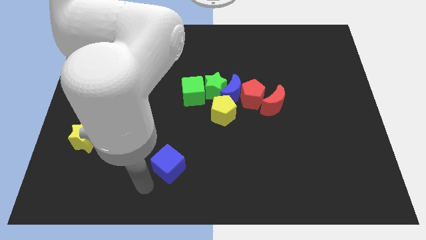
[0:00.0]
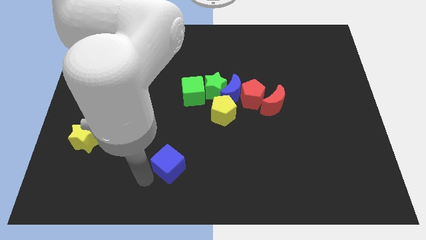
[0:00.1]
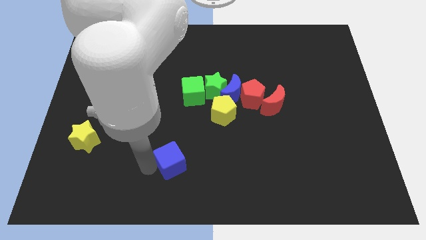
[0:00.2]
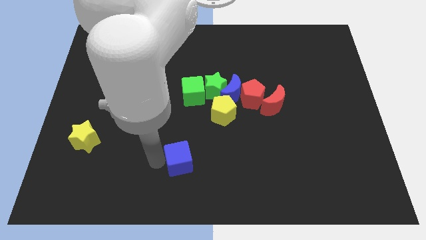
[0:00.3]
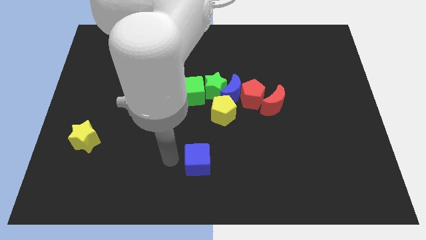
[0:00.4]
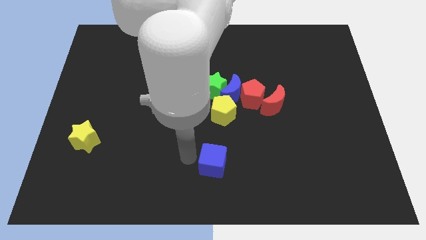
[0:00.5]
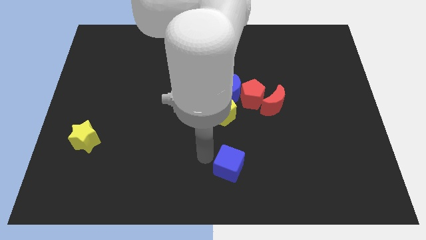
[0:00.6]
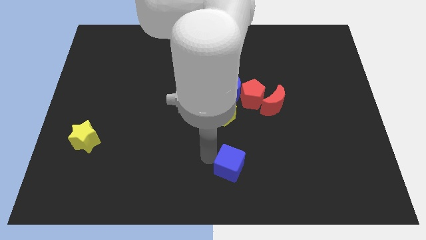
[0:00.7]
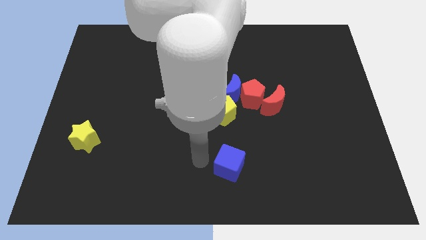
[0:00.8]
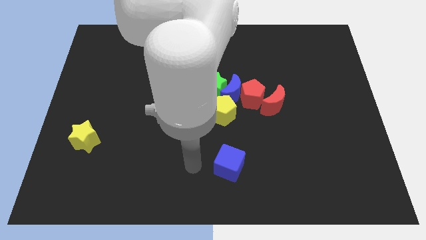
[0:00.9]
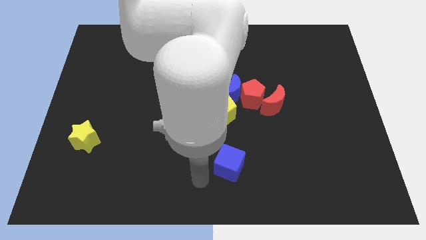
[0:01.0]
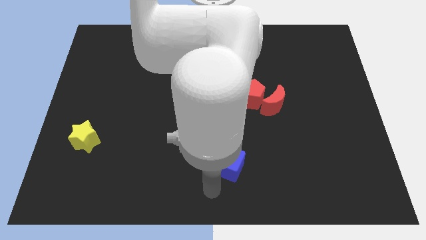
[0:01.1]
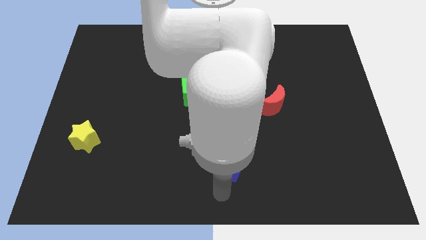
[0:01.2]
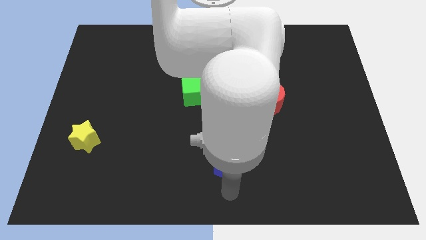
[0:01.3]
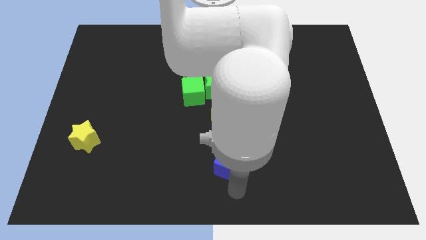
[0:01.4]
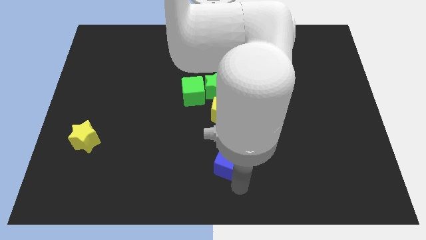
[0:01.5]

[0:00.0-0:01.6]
place the blue cube below the yellow pentagon

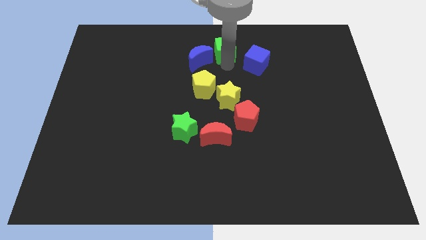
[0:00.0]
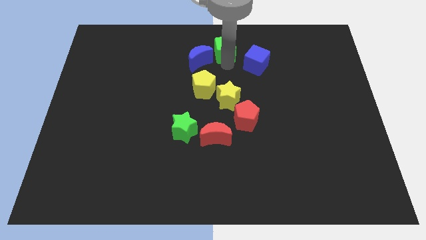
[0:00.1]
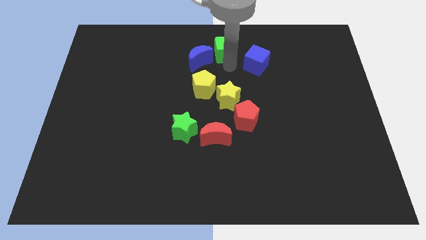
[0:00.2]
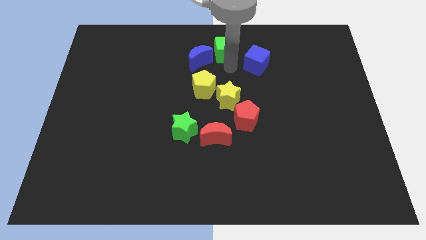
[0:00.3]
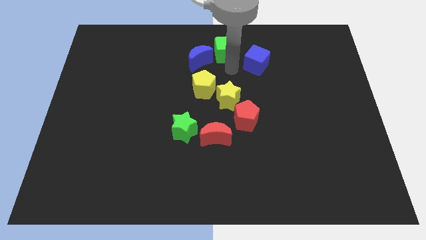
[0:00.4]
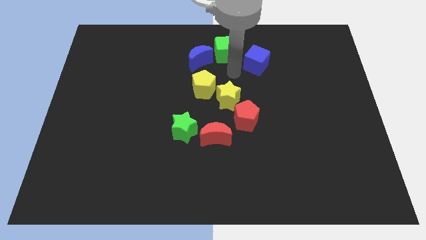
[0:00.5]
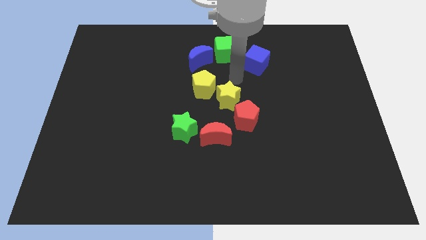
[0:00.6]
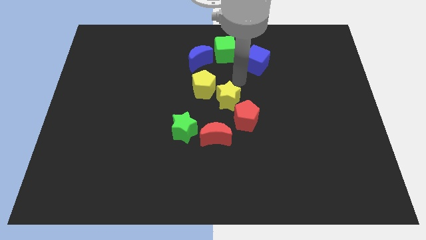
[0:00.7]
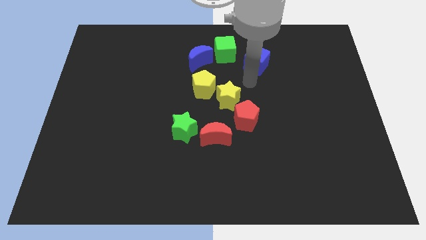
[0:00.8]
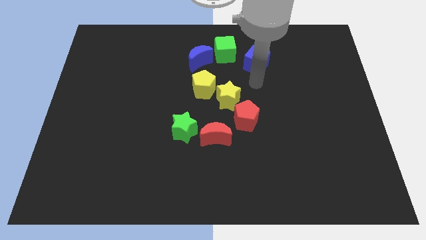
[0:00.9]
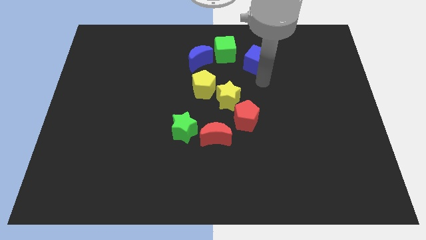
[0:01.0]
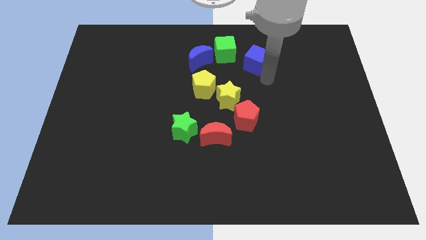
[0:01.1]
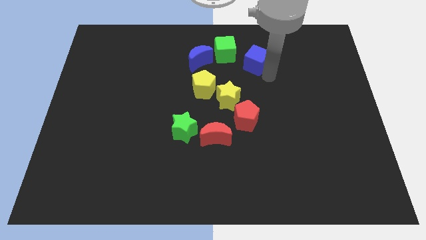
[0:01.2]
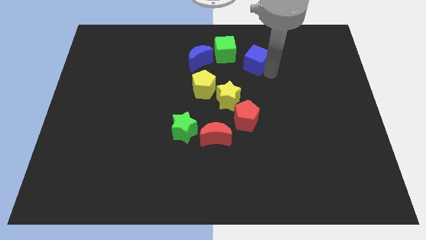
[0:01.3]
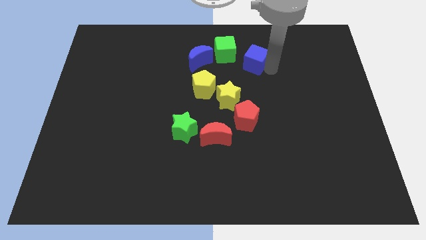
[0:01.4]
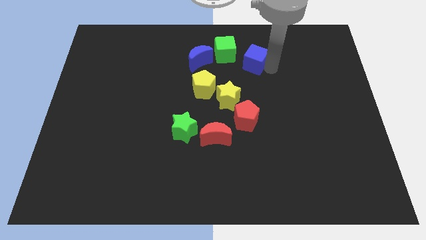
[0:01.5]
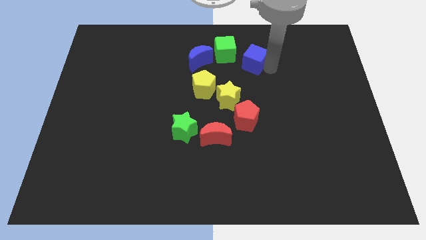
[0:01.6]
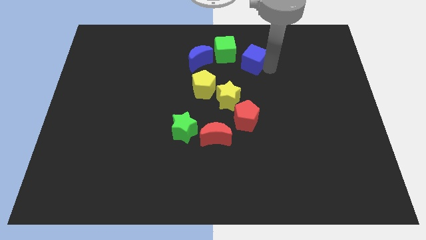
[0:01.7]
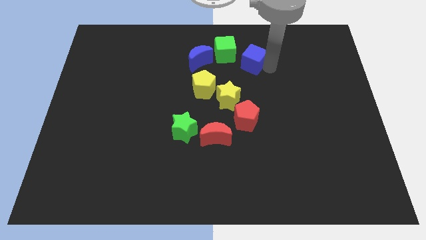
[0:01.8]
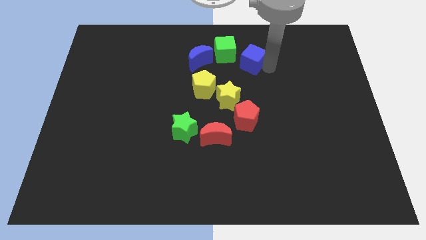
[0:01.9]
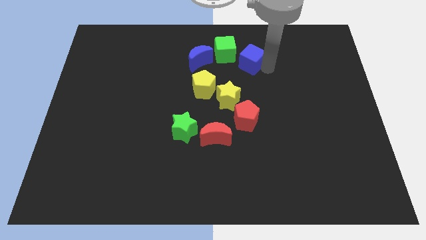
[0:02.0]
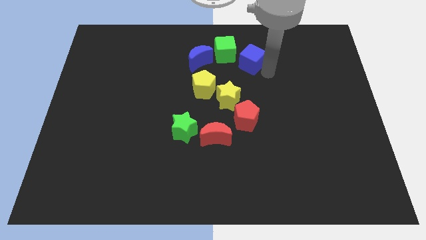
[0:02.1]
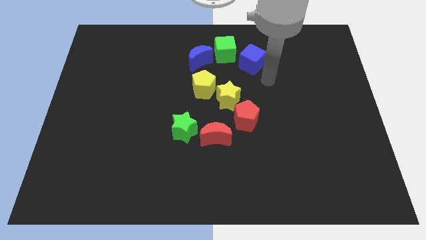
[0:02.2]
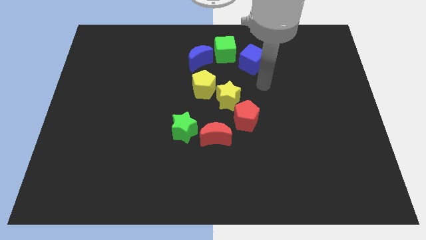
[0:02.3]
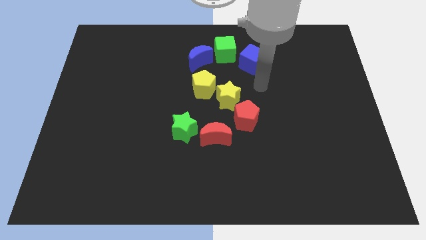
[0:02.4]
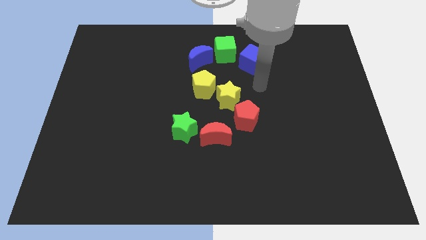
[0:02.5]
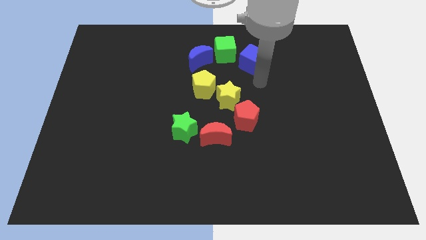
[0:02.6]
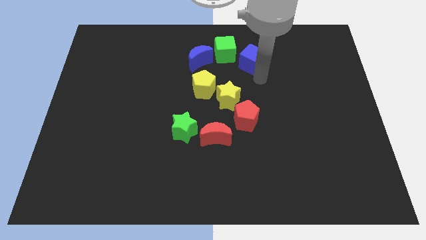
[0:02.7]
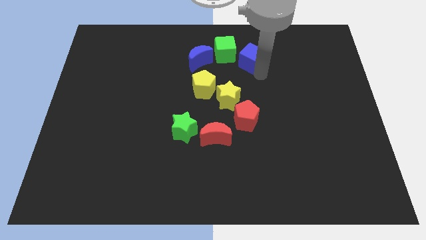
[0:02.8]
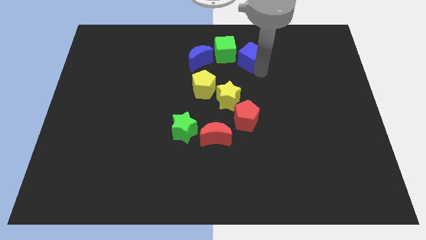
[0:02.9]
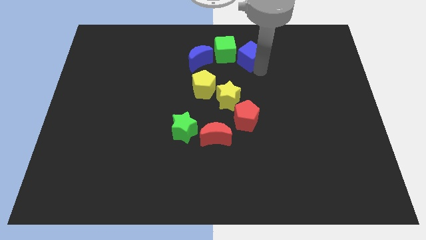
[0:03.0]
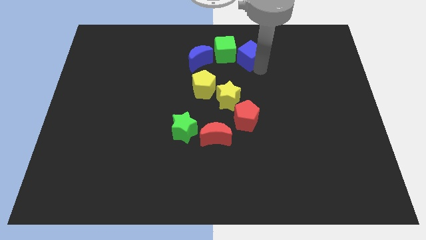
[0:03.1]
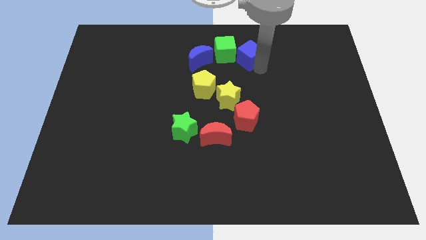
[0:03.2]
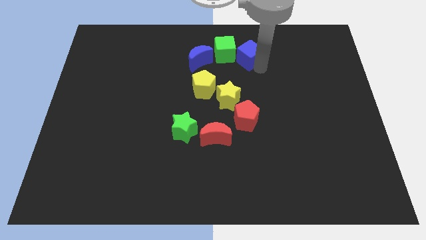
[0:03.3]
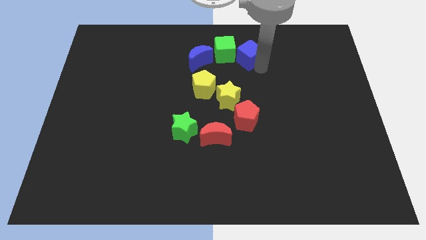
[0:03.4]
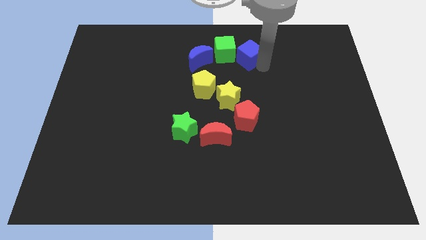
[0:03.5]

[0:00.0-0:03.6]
push the blue cube into the green cube

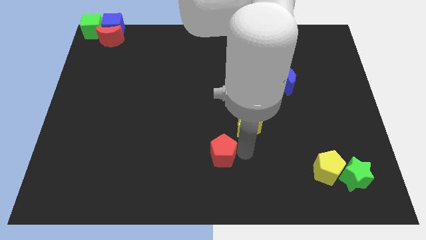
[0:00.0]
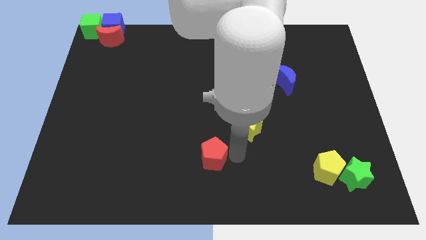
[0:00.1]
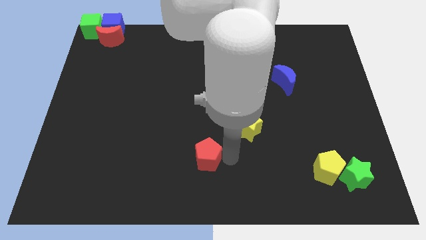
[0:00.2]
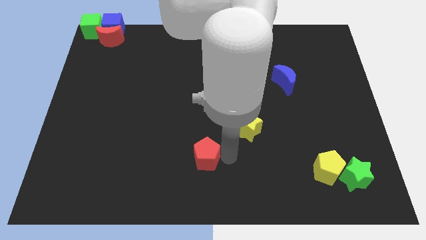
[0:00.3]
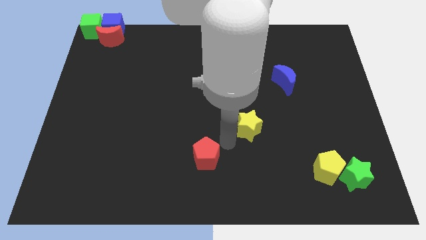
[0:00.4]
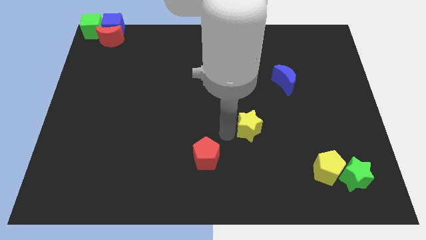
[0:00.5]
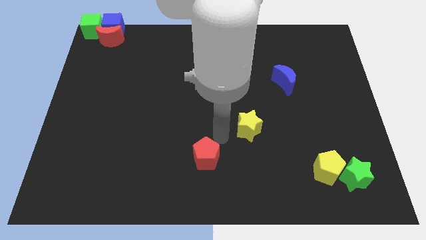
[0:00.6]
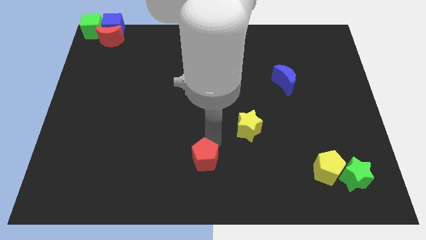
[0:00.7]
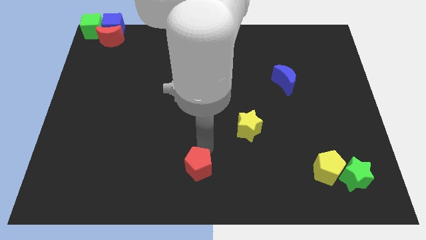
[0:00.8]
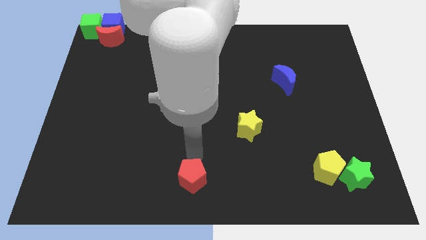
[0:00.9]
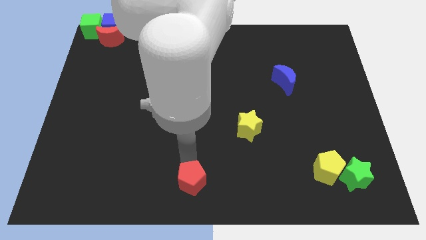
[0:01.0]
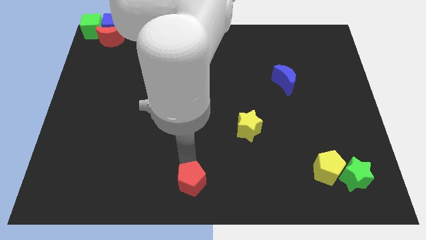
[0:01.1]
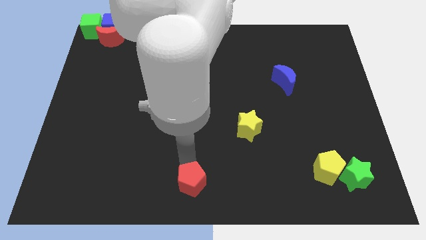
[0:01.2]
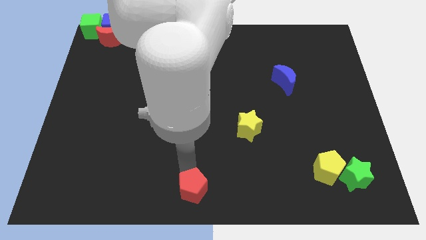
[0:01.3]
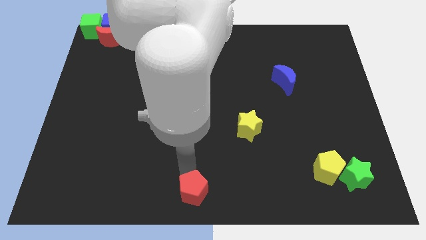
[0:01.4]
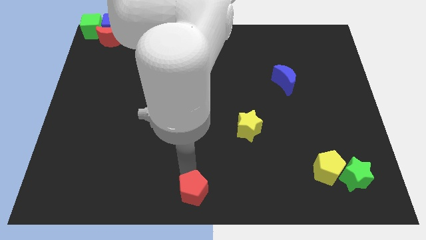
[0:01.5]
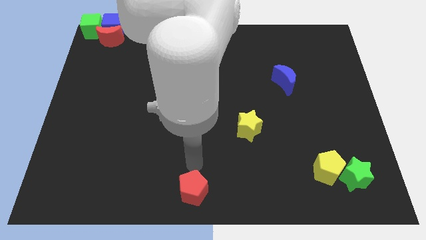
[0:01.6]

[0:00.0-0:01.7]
push the red pentagon slightly to the bottom left

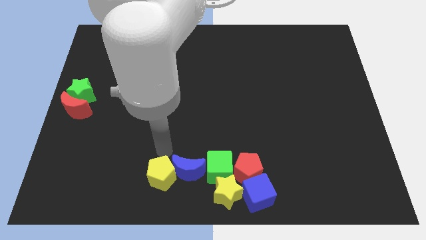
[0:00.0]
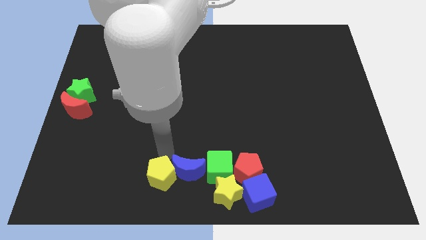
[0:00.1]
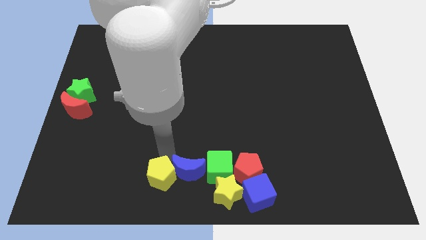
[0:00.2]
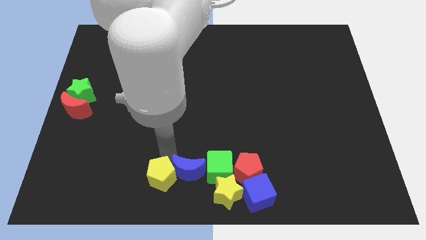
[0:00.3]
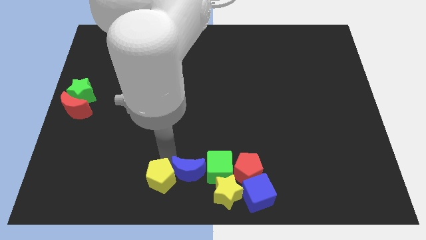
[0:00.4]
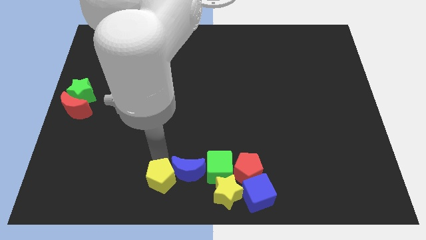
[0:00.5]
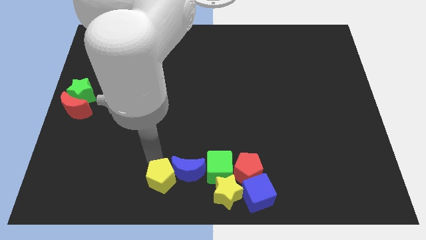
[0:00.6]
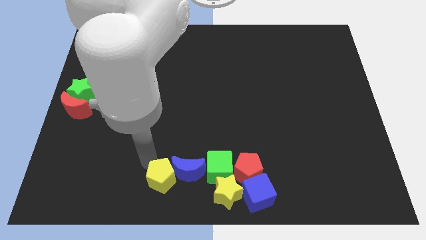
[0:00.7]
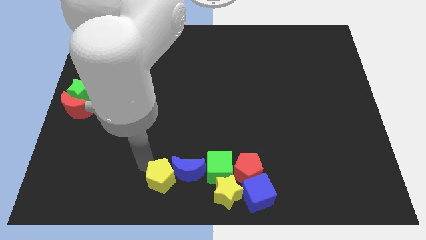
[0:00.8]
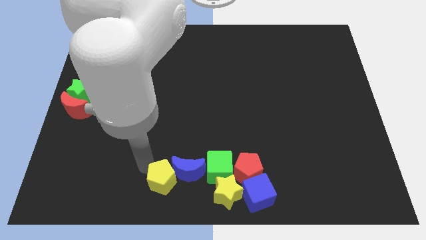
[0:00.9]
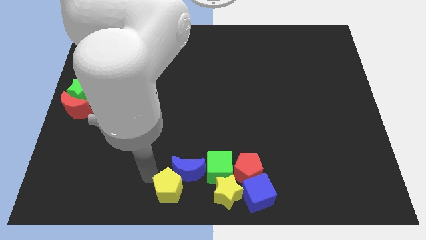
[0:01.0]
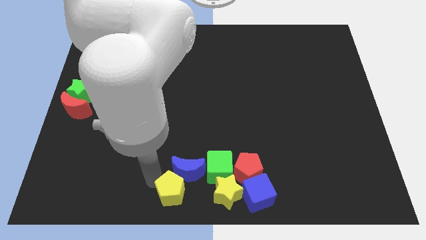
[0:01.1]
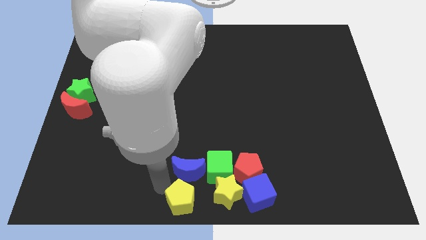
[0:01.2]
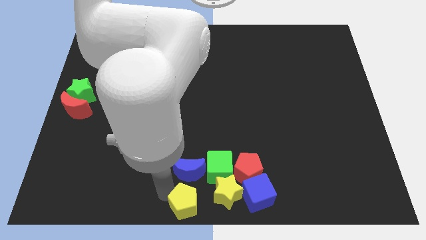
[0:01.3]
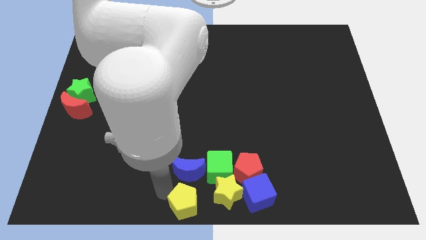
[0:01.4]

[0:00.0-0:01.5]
push the yellow pentagon downwards

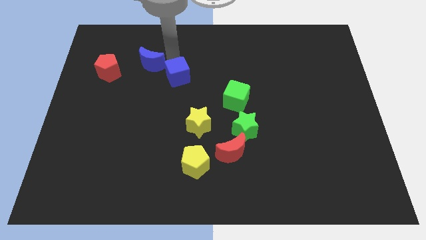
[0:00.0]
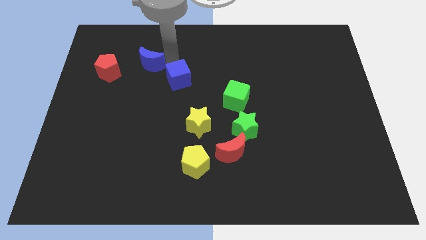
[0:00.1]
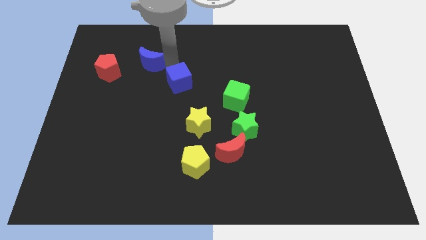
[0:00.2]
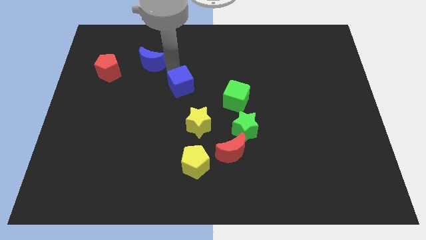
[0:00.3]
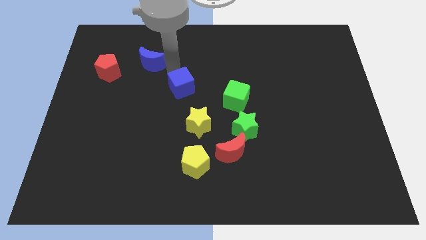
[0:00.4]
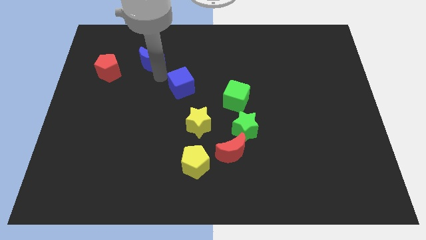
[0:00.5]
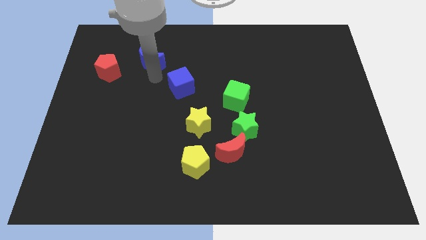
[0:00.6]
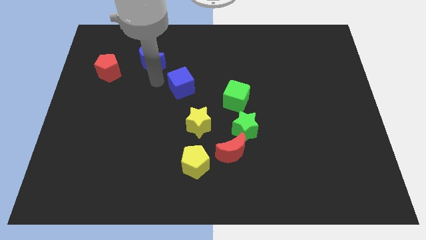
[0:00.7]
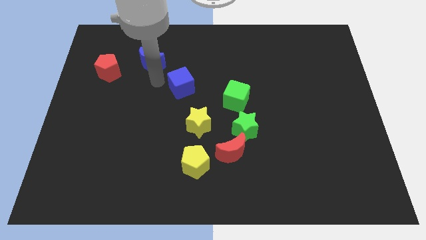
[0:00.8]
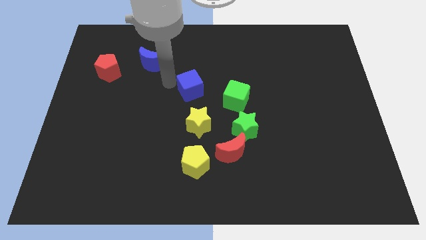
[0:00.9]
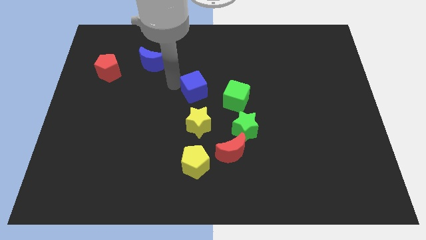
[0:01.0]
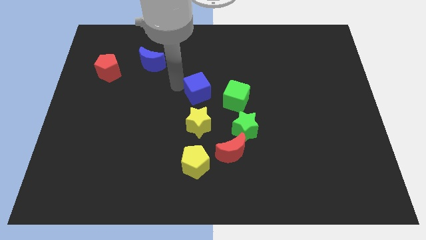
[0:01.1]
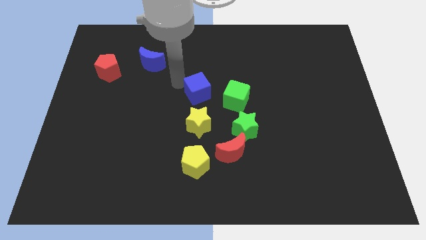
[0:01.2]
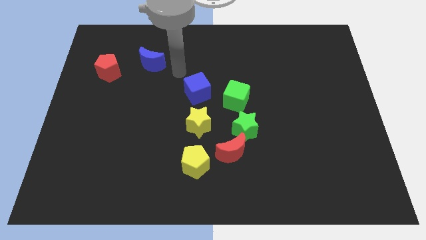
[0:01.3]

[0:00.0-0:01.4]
place blue cube to the top of yellow star
